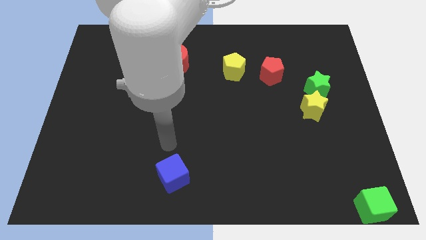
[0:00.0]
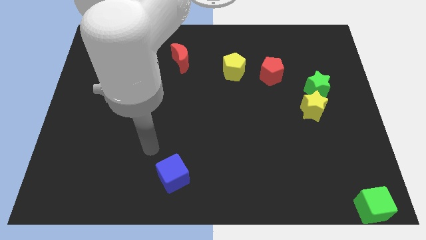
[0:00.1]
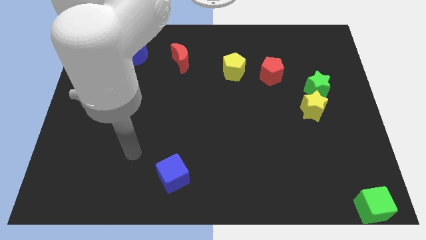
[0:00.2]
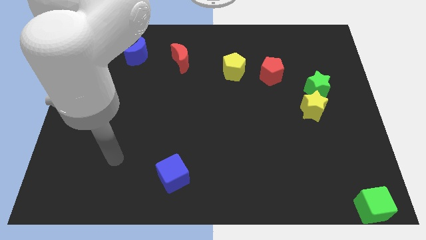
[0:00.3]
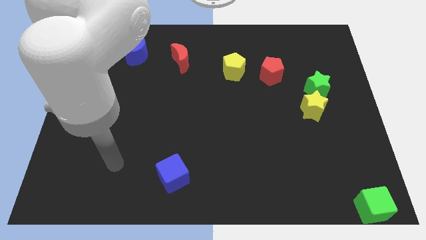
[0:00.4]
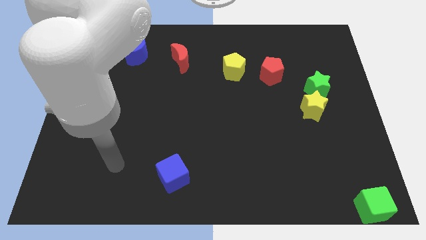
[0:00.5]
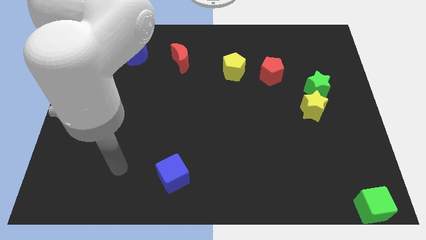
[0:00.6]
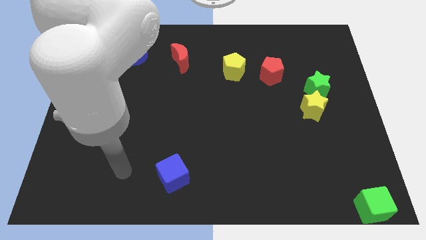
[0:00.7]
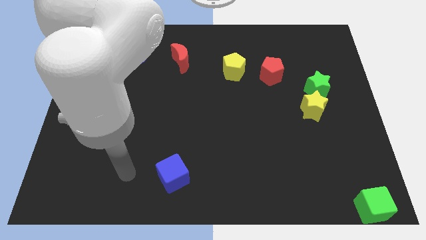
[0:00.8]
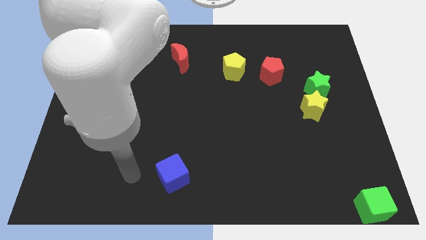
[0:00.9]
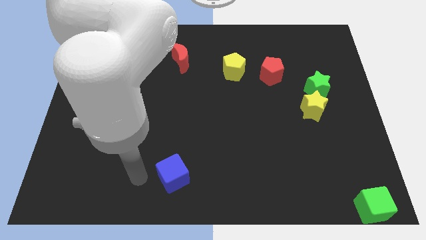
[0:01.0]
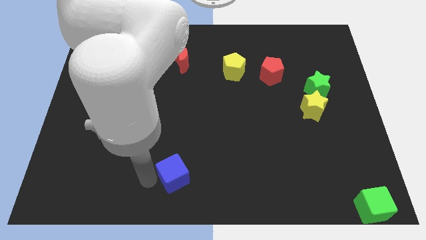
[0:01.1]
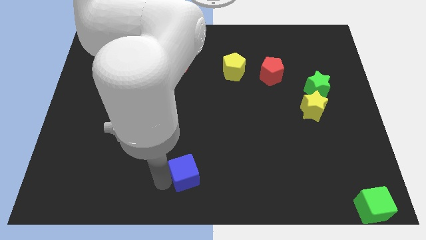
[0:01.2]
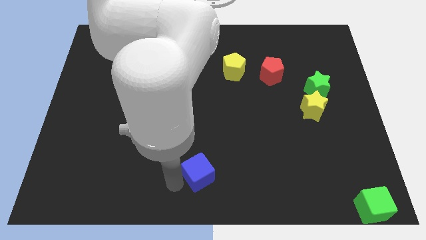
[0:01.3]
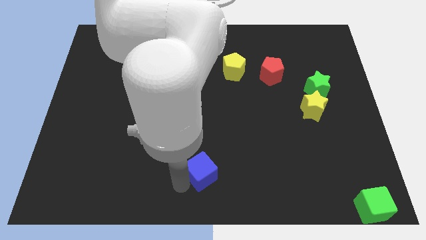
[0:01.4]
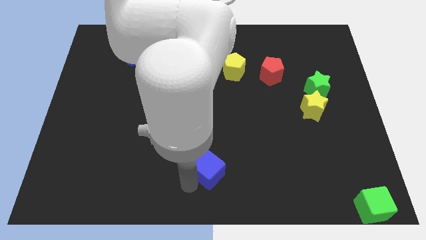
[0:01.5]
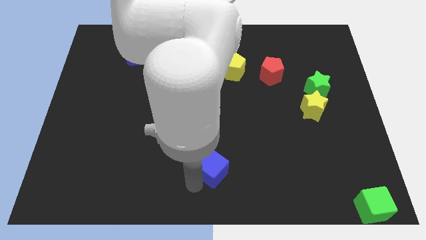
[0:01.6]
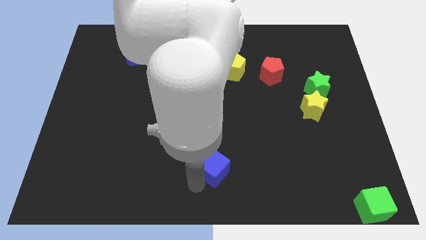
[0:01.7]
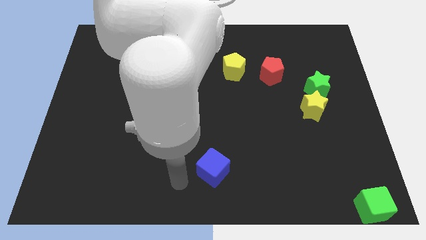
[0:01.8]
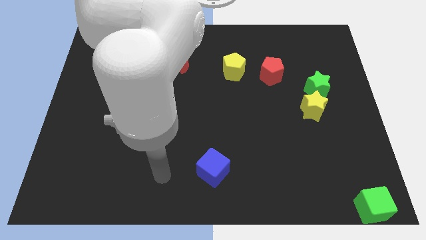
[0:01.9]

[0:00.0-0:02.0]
place the blue cube vertically below the yellow pentagon

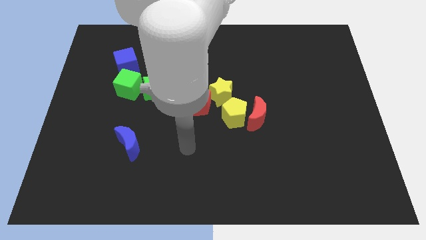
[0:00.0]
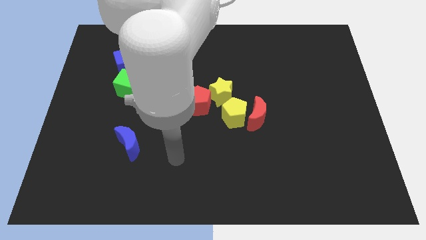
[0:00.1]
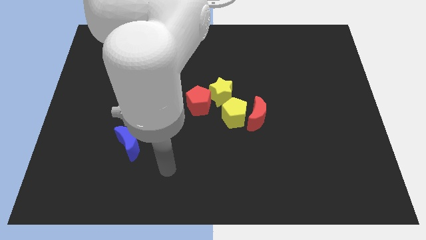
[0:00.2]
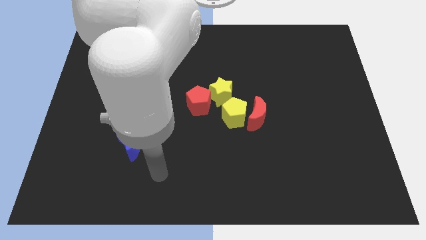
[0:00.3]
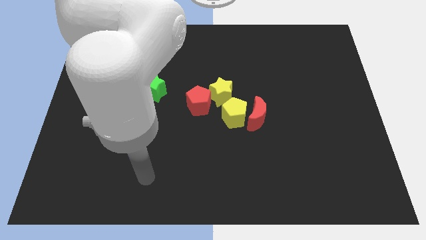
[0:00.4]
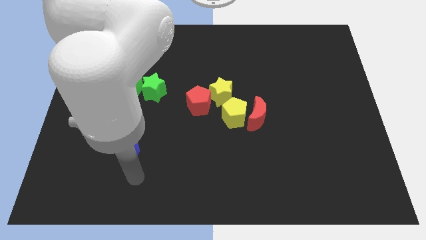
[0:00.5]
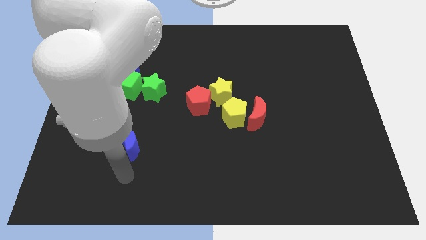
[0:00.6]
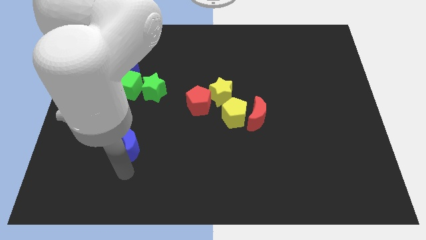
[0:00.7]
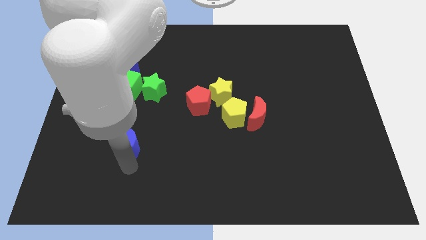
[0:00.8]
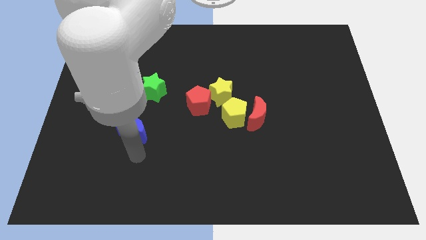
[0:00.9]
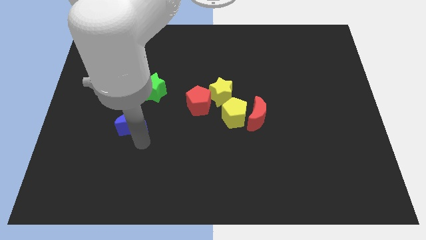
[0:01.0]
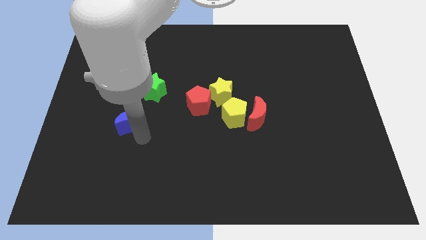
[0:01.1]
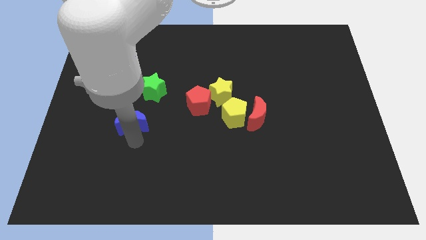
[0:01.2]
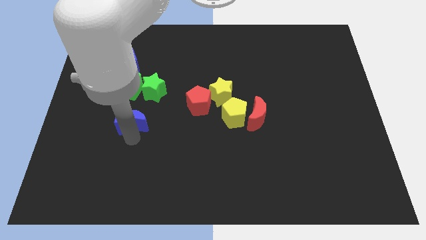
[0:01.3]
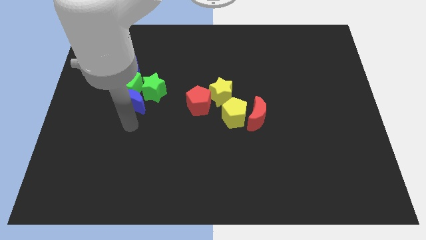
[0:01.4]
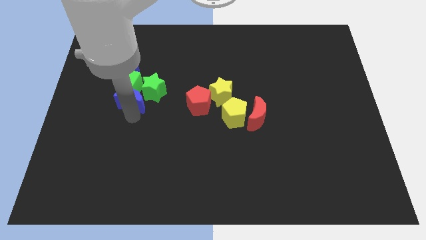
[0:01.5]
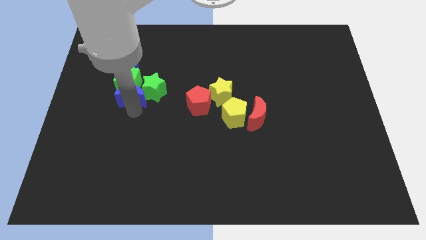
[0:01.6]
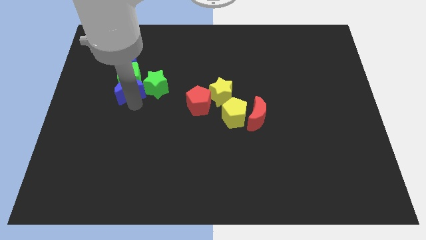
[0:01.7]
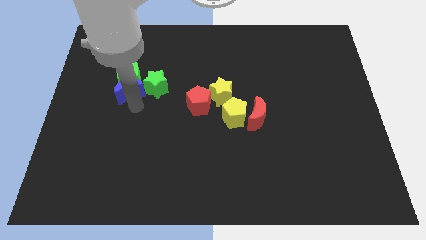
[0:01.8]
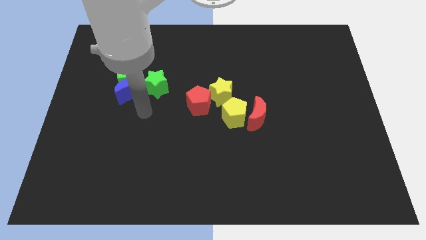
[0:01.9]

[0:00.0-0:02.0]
move the blue moon into the green cube

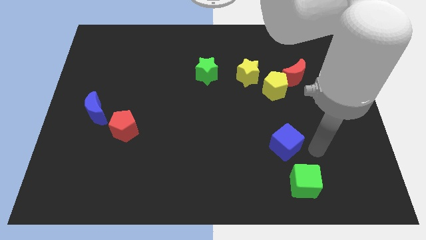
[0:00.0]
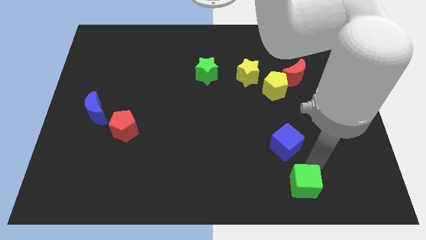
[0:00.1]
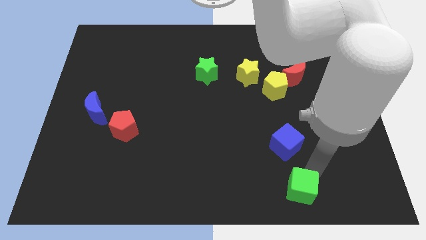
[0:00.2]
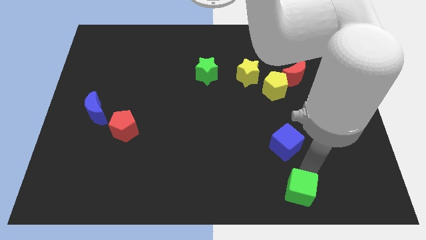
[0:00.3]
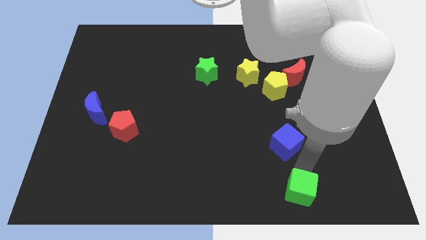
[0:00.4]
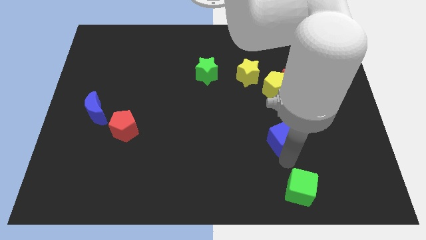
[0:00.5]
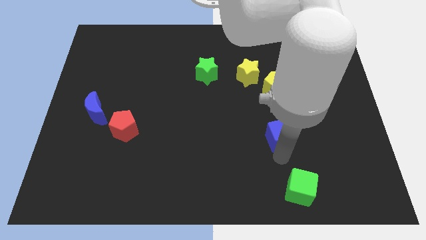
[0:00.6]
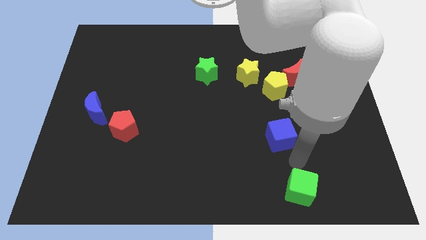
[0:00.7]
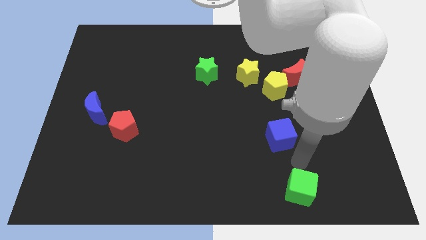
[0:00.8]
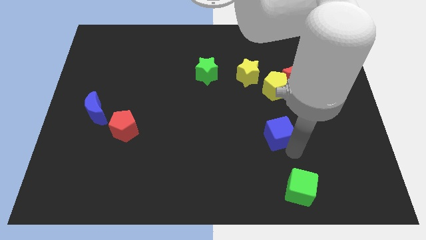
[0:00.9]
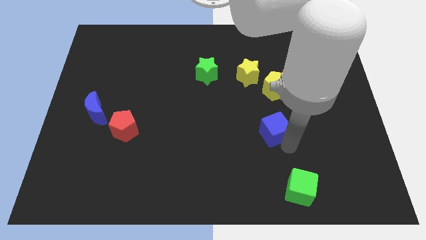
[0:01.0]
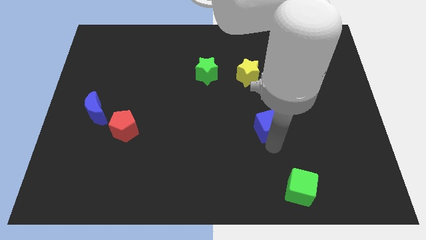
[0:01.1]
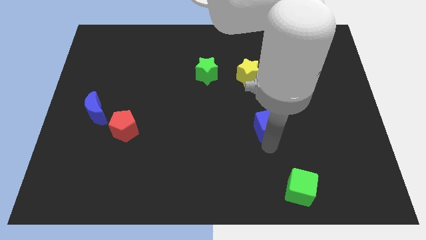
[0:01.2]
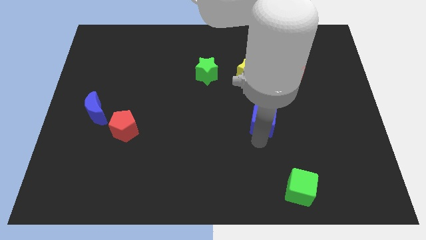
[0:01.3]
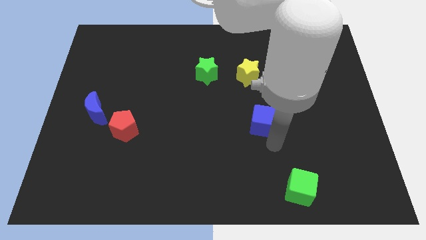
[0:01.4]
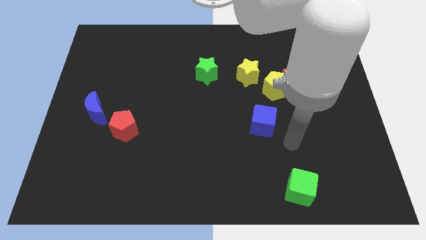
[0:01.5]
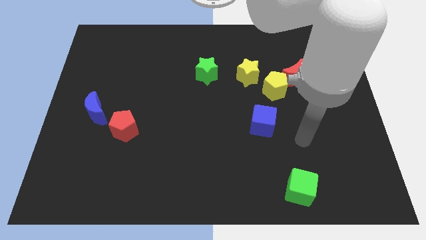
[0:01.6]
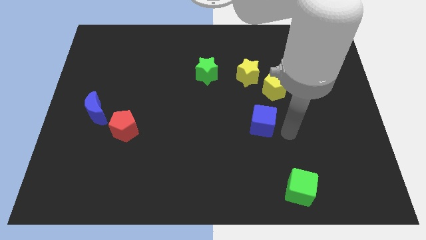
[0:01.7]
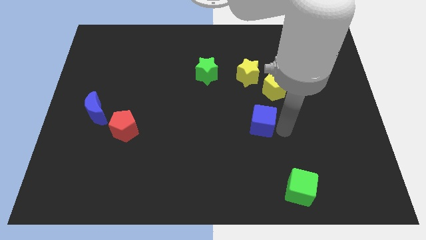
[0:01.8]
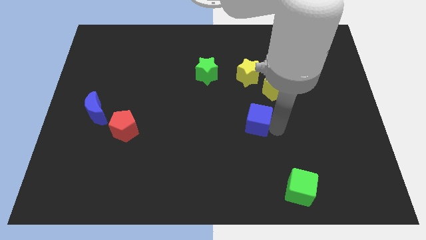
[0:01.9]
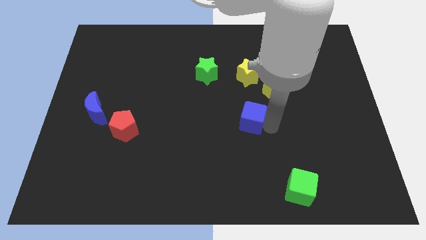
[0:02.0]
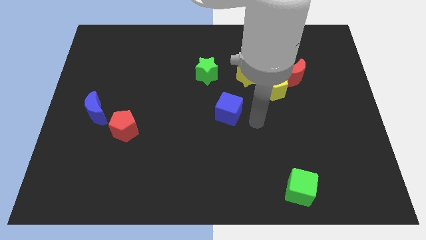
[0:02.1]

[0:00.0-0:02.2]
push the blue cube near to the center of the board

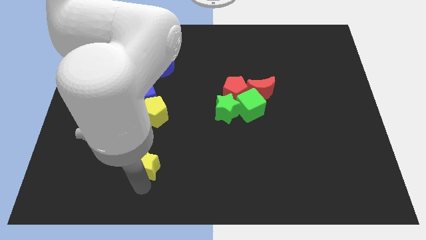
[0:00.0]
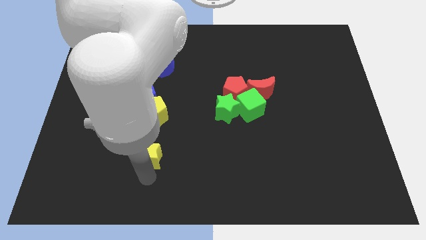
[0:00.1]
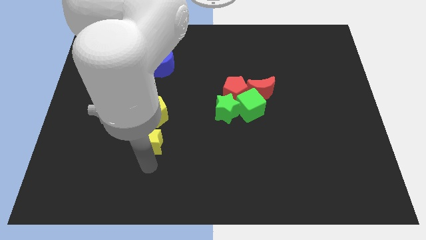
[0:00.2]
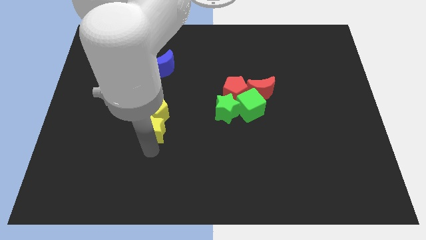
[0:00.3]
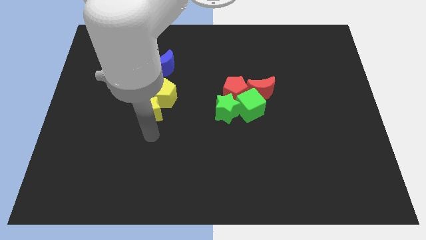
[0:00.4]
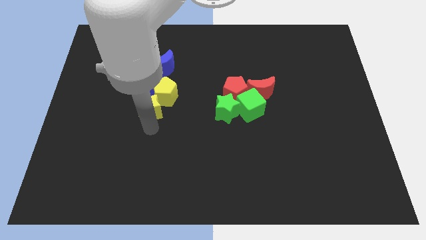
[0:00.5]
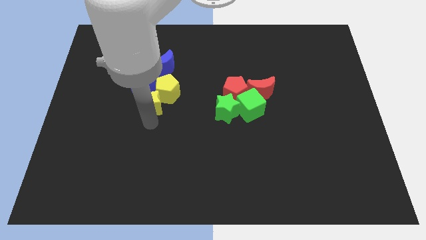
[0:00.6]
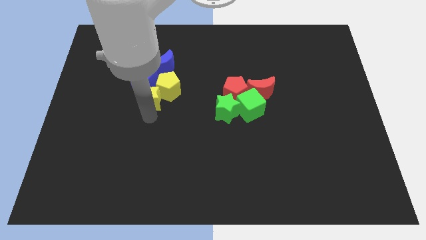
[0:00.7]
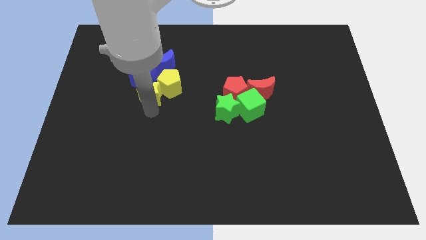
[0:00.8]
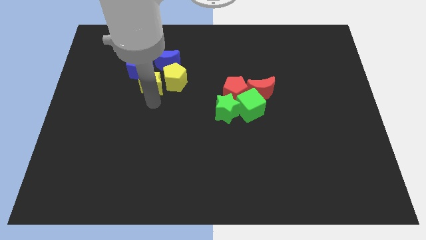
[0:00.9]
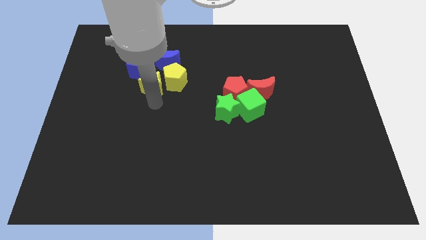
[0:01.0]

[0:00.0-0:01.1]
push yellow star towards blue cube

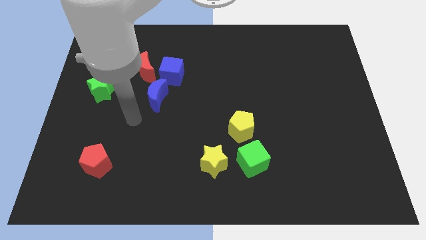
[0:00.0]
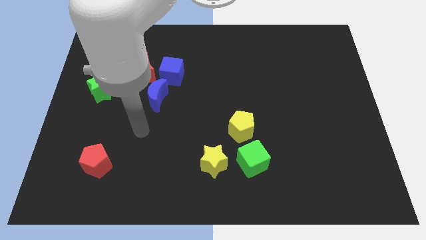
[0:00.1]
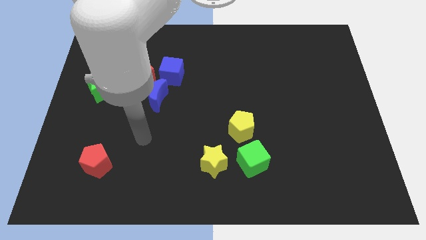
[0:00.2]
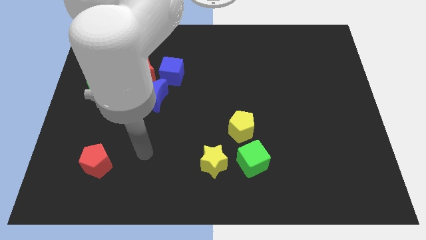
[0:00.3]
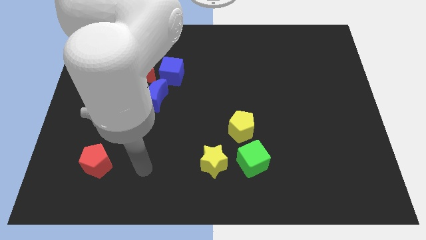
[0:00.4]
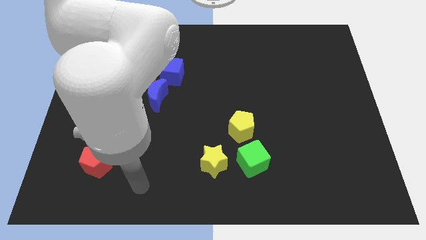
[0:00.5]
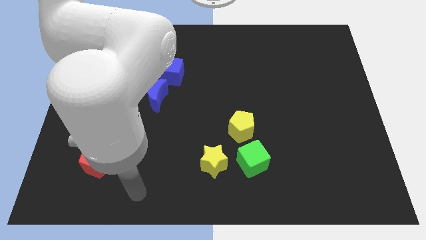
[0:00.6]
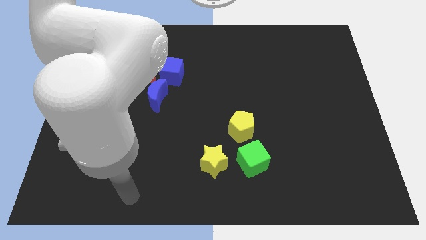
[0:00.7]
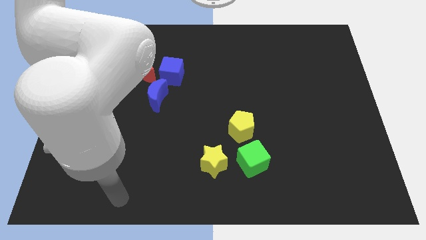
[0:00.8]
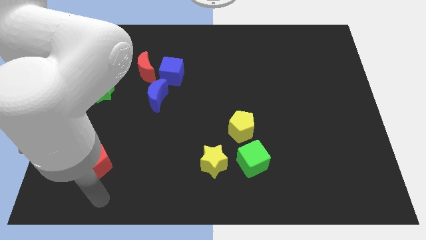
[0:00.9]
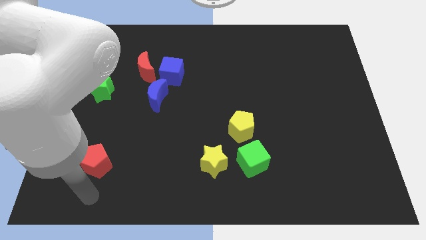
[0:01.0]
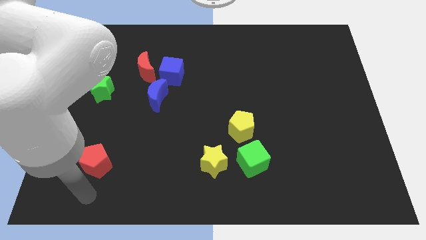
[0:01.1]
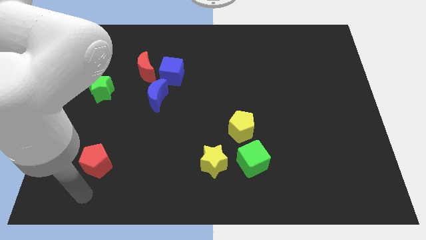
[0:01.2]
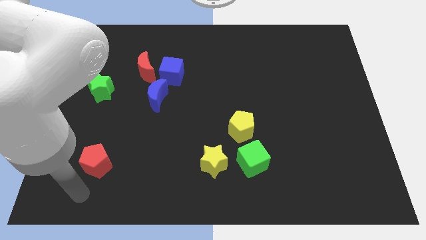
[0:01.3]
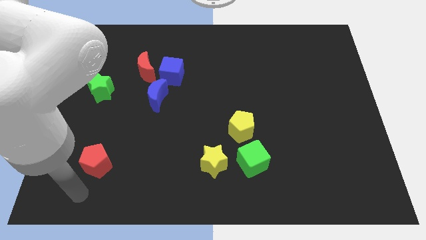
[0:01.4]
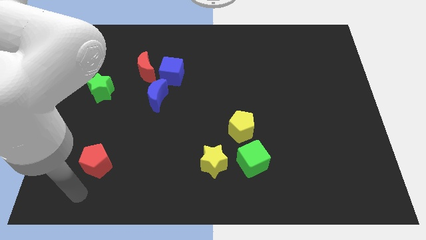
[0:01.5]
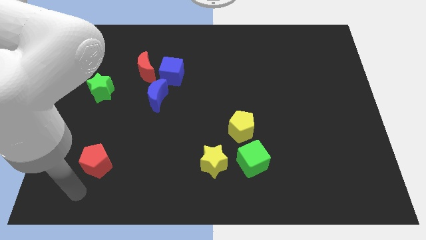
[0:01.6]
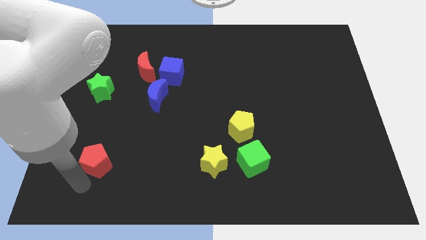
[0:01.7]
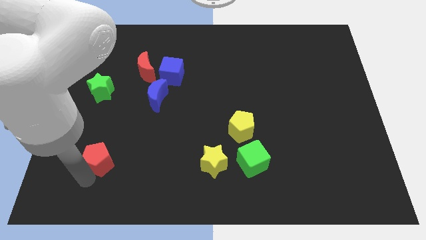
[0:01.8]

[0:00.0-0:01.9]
move the arm towards the red pentagon
